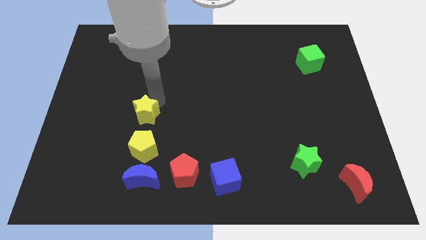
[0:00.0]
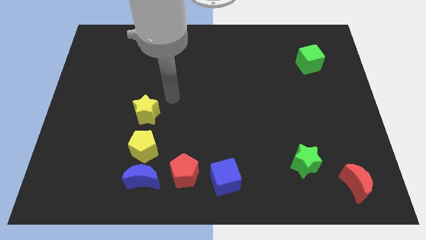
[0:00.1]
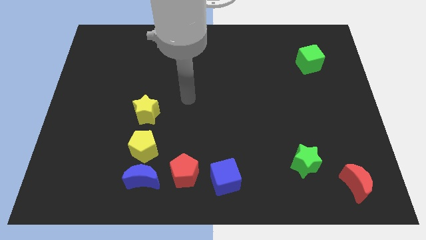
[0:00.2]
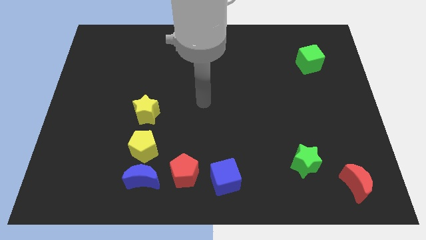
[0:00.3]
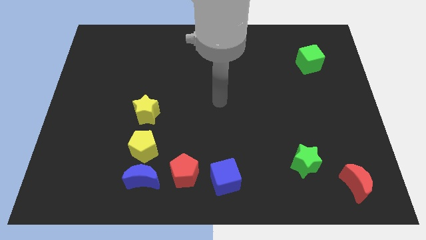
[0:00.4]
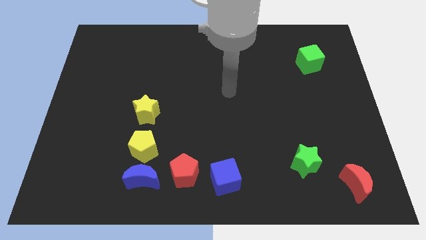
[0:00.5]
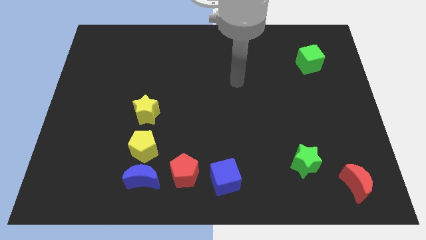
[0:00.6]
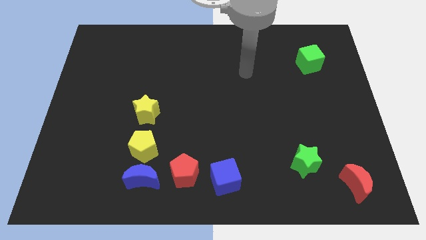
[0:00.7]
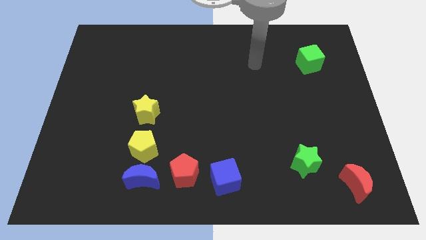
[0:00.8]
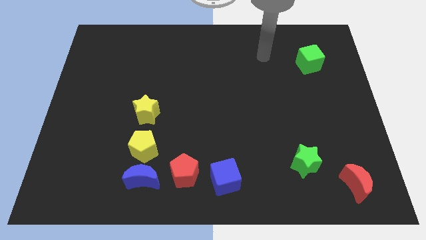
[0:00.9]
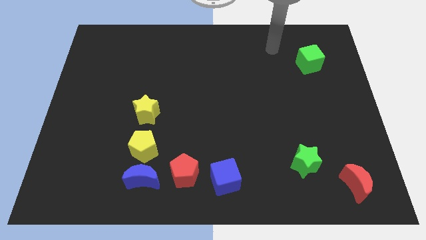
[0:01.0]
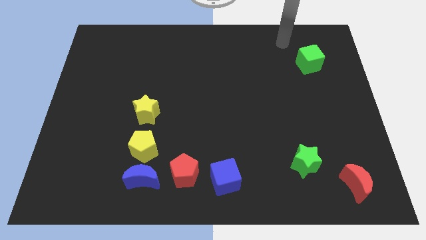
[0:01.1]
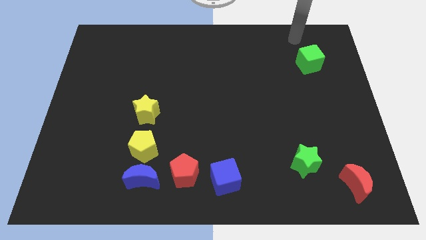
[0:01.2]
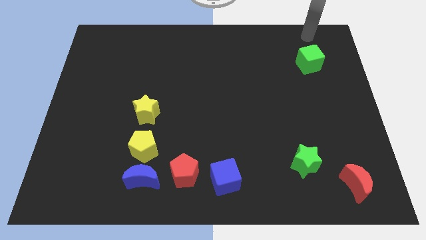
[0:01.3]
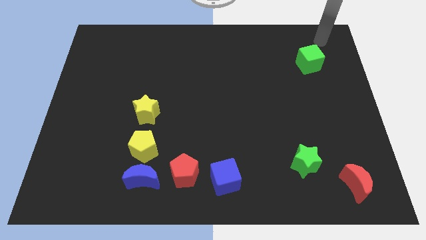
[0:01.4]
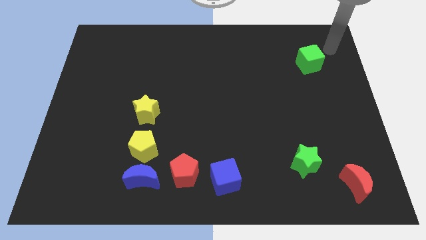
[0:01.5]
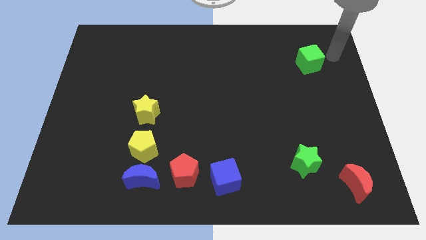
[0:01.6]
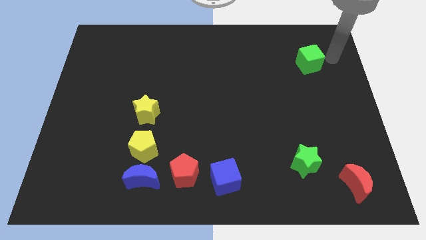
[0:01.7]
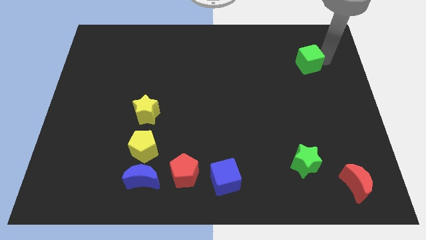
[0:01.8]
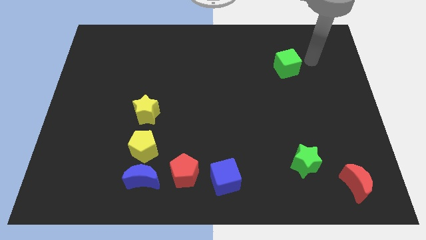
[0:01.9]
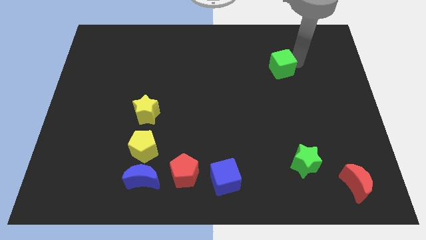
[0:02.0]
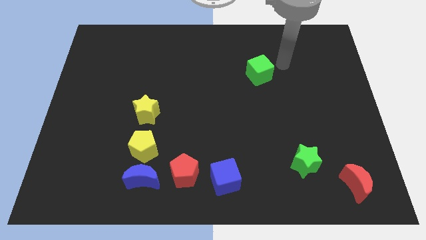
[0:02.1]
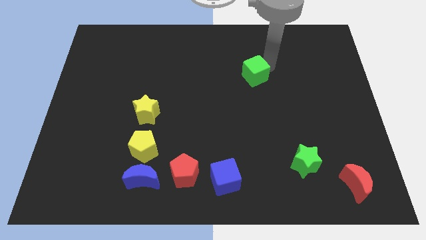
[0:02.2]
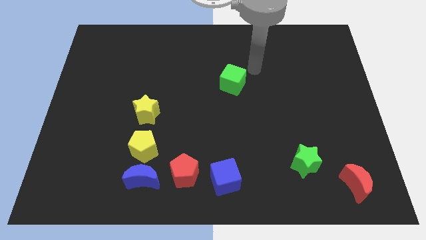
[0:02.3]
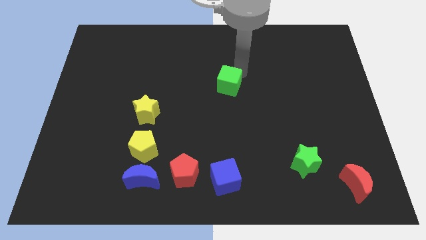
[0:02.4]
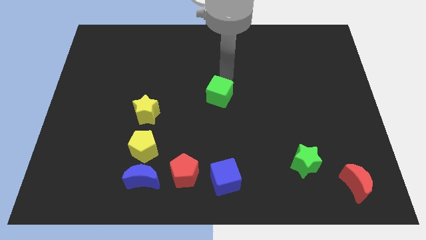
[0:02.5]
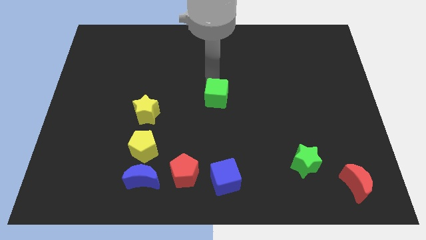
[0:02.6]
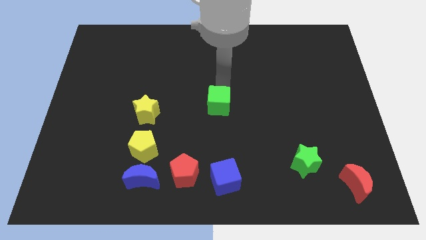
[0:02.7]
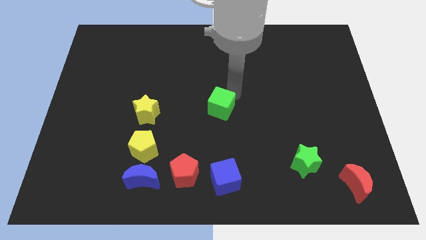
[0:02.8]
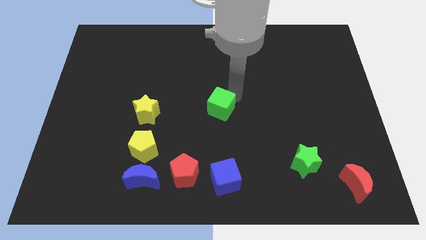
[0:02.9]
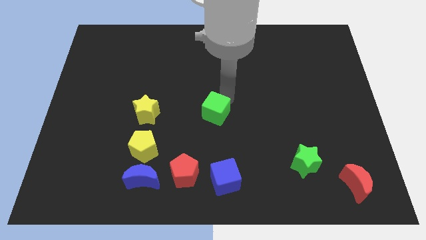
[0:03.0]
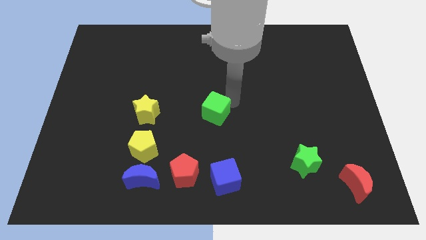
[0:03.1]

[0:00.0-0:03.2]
place the green cube horizontal to the yellow star

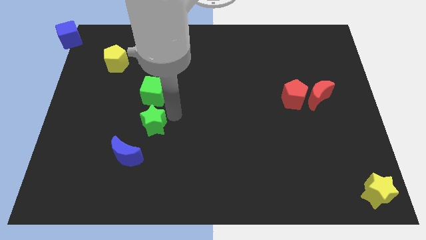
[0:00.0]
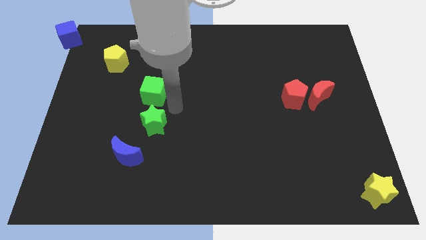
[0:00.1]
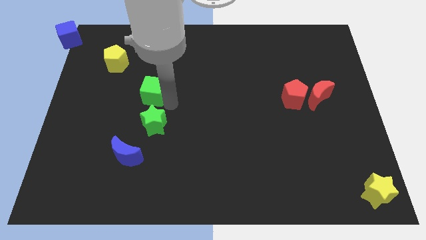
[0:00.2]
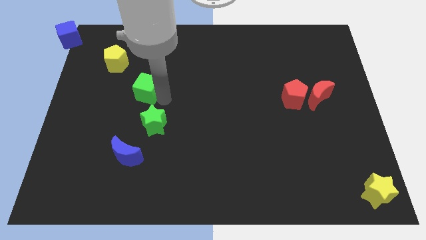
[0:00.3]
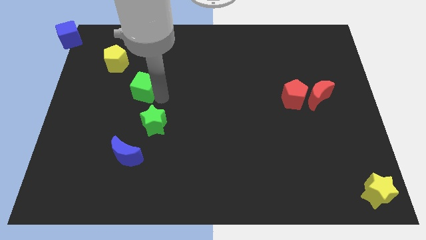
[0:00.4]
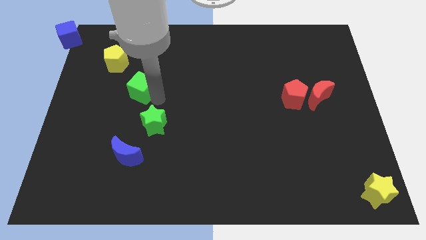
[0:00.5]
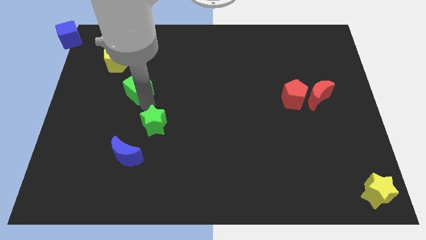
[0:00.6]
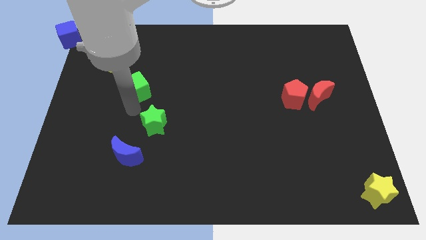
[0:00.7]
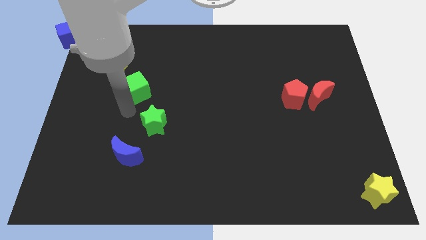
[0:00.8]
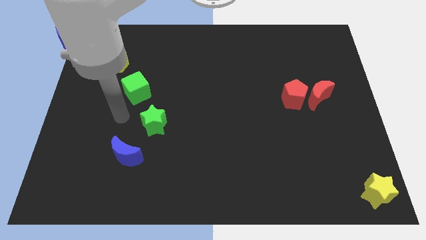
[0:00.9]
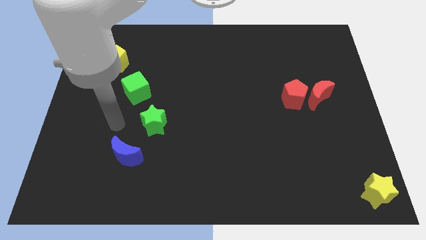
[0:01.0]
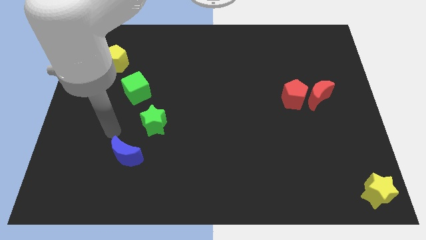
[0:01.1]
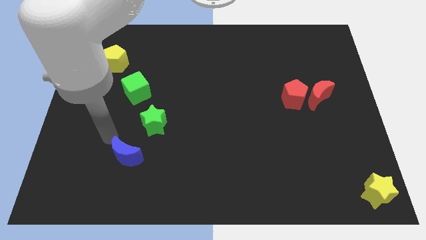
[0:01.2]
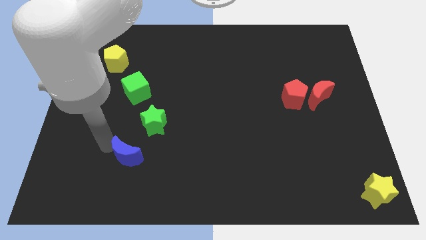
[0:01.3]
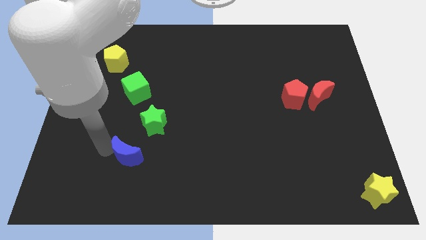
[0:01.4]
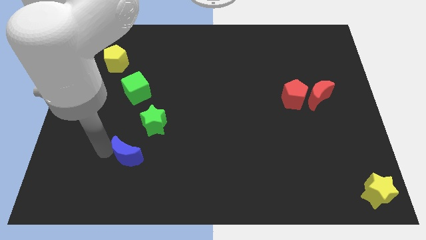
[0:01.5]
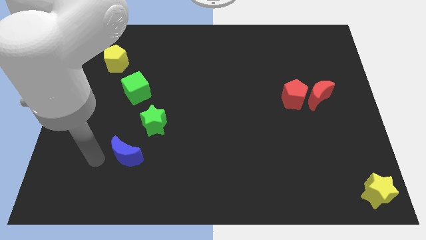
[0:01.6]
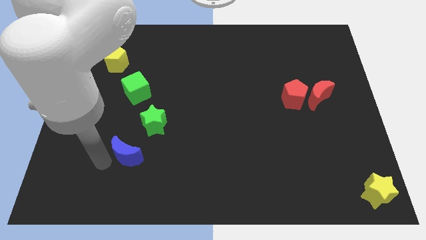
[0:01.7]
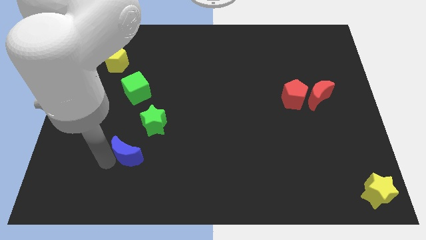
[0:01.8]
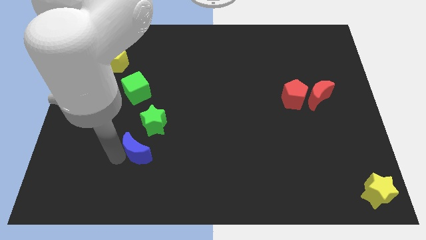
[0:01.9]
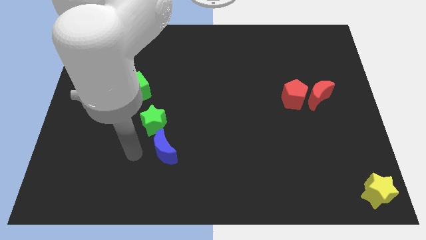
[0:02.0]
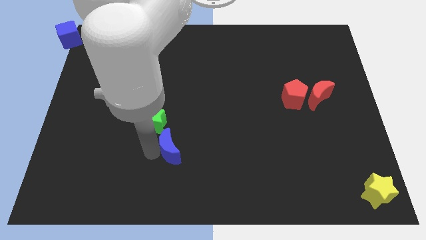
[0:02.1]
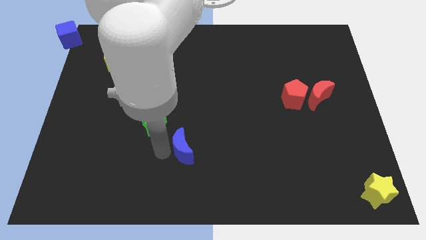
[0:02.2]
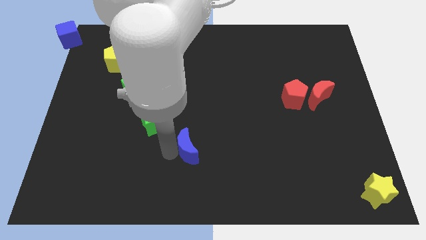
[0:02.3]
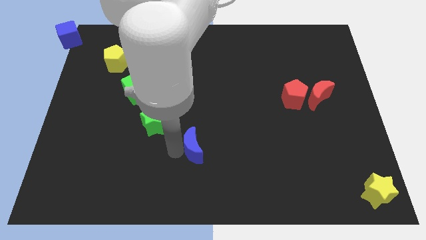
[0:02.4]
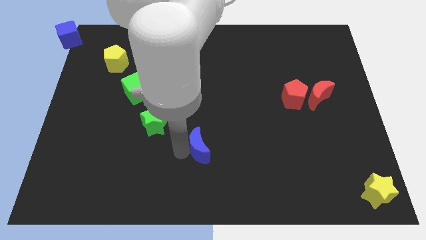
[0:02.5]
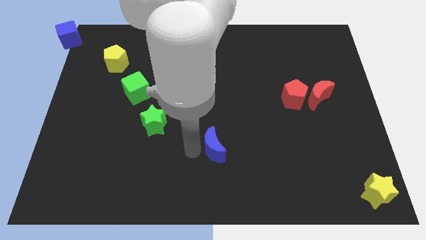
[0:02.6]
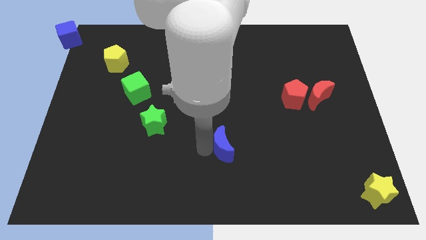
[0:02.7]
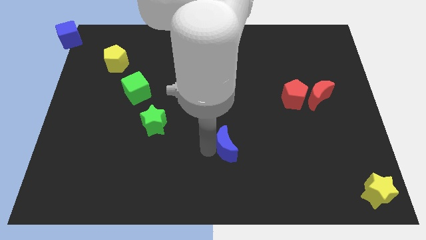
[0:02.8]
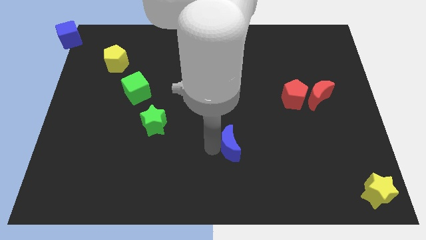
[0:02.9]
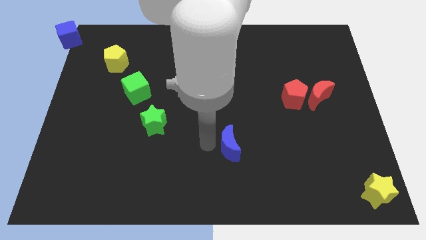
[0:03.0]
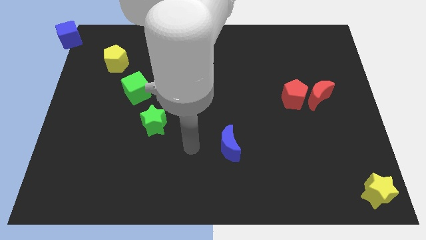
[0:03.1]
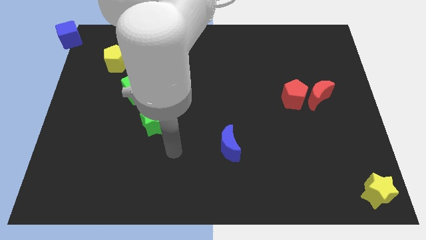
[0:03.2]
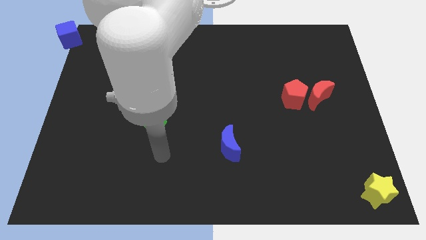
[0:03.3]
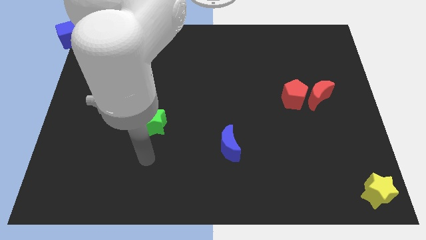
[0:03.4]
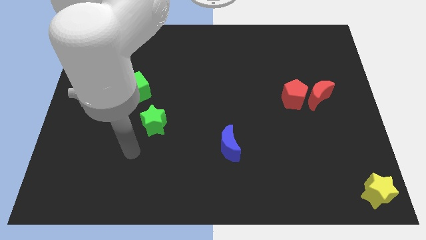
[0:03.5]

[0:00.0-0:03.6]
push the blue moon diagonal to yellow star

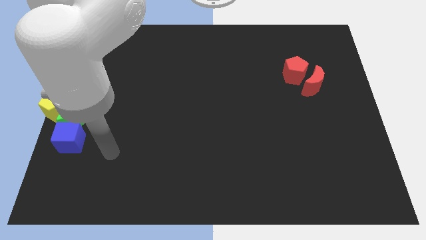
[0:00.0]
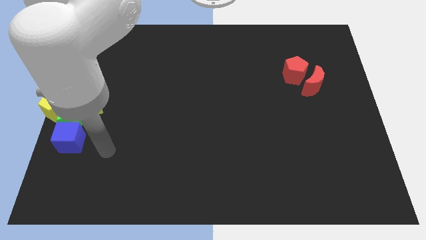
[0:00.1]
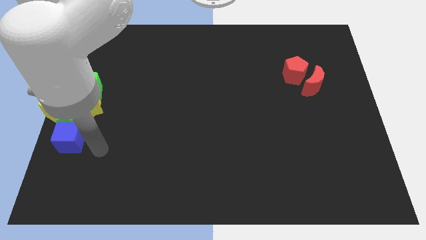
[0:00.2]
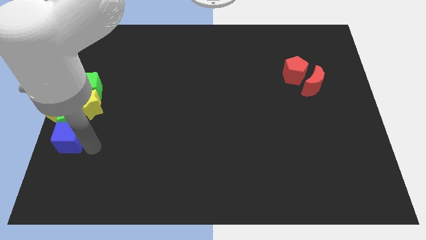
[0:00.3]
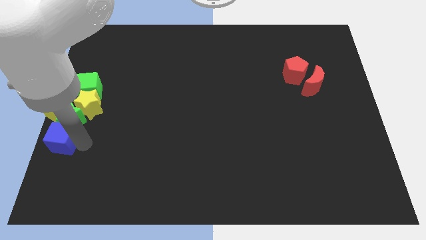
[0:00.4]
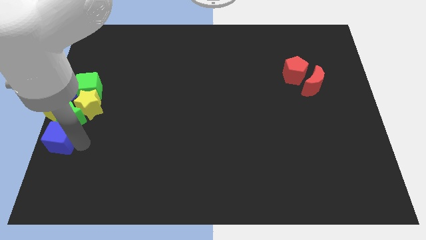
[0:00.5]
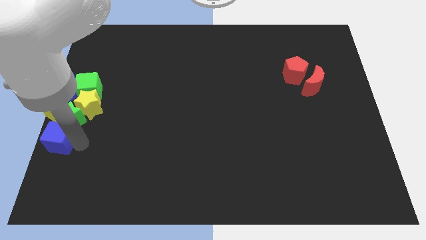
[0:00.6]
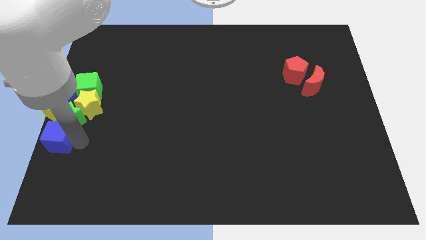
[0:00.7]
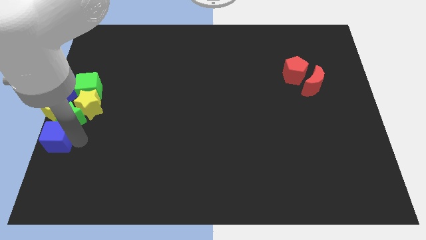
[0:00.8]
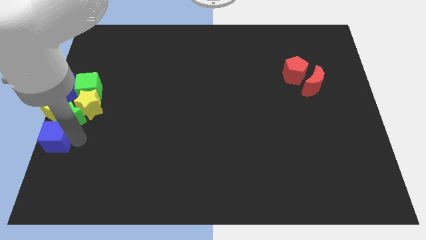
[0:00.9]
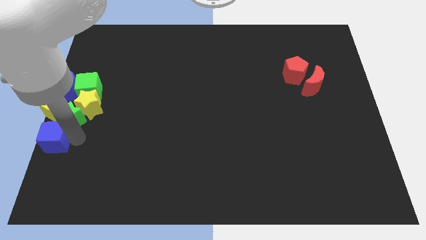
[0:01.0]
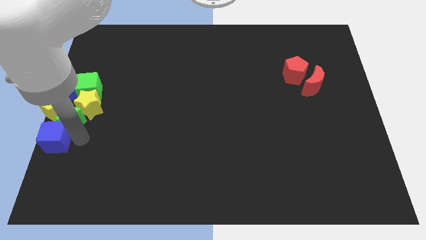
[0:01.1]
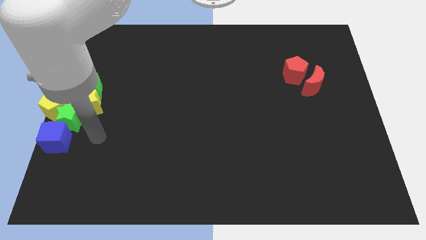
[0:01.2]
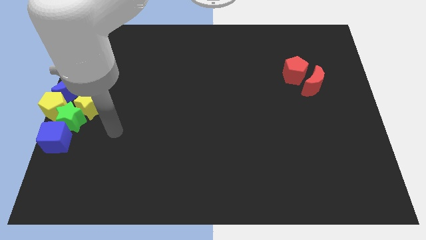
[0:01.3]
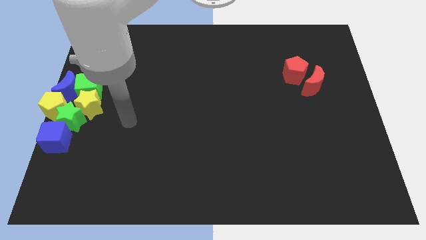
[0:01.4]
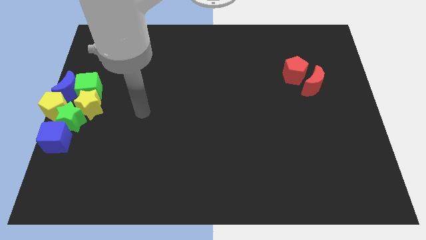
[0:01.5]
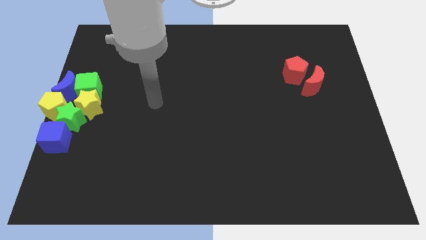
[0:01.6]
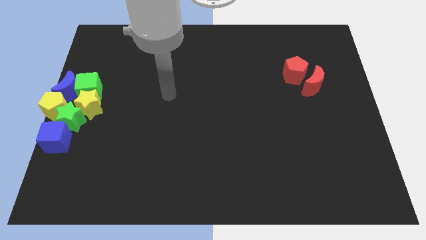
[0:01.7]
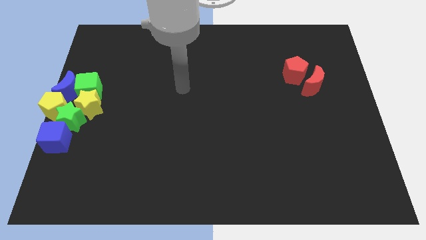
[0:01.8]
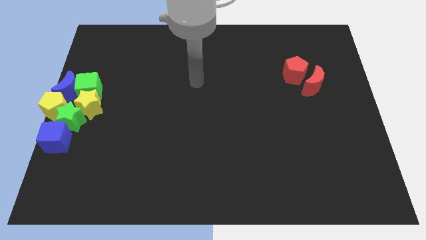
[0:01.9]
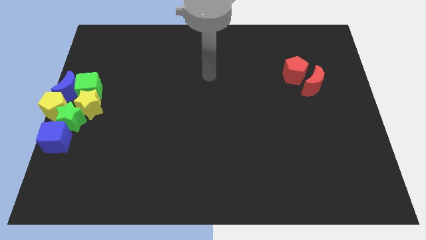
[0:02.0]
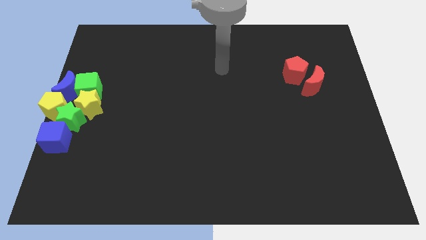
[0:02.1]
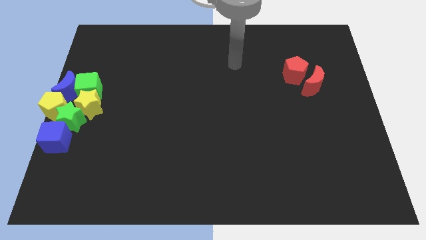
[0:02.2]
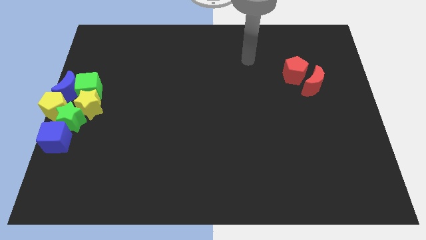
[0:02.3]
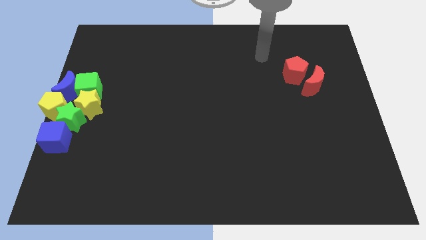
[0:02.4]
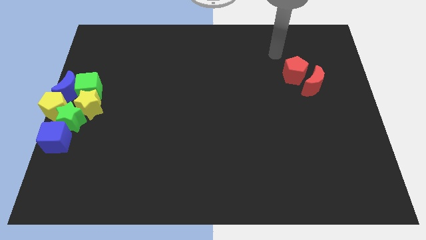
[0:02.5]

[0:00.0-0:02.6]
move the blue cube slightly towards the left side
